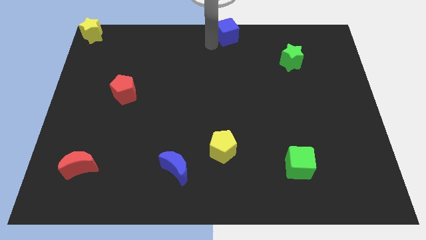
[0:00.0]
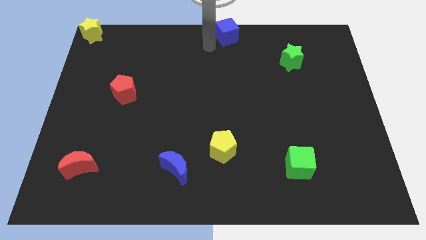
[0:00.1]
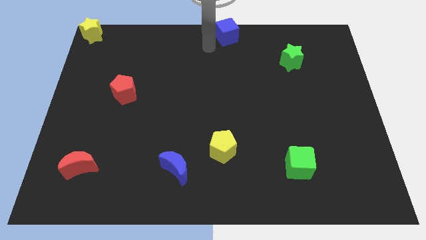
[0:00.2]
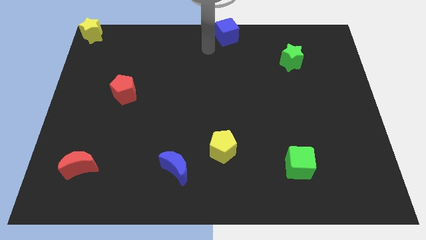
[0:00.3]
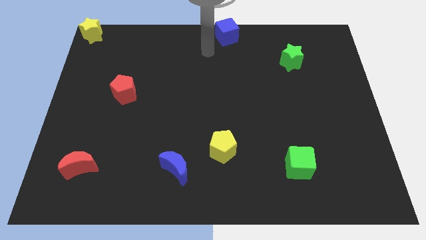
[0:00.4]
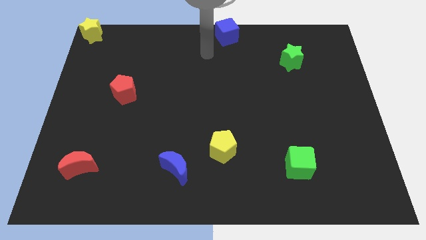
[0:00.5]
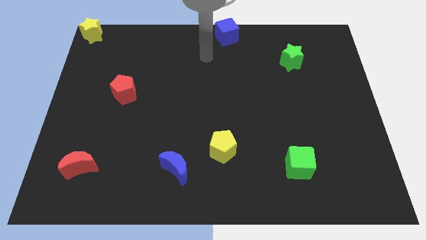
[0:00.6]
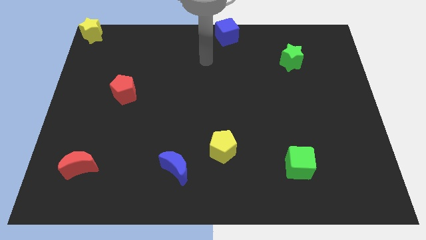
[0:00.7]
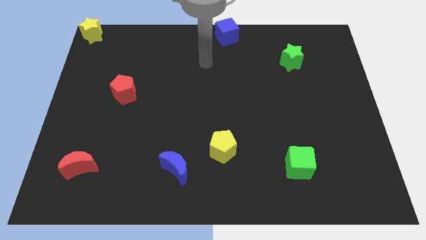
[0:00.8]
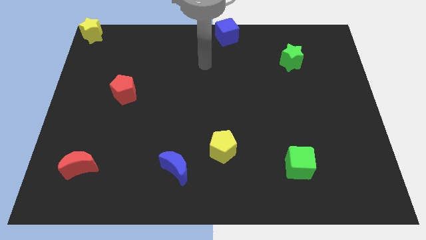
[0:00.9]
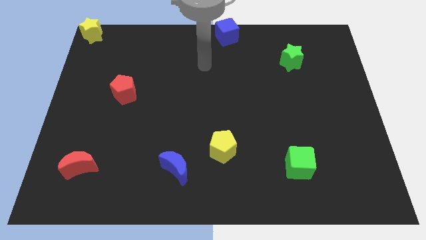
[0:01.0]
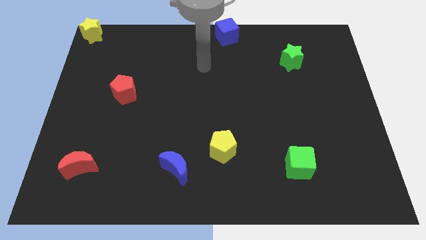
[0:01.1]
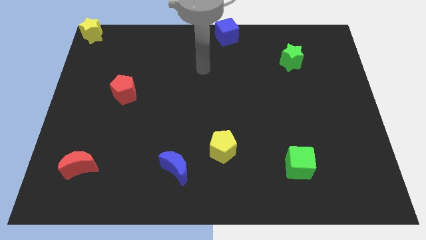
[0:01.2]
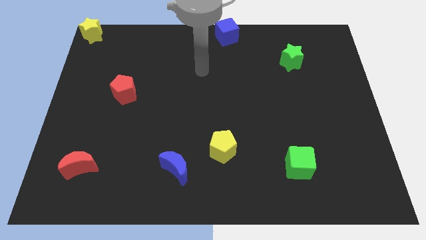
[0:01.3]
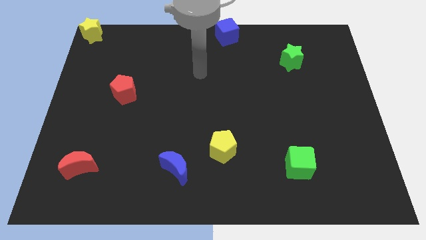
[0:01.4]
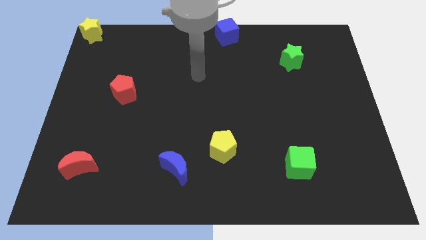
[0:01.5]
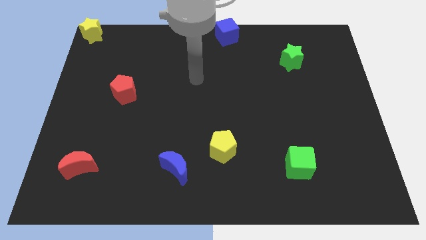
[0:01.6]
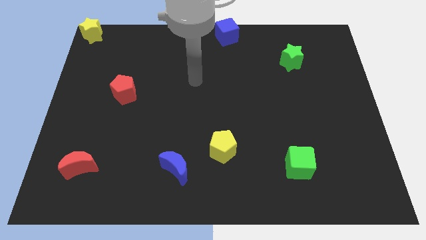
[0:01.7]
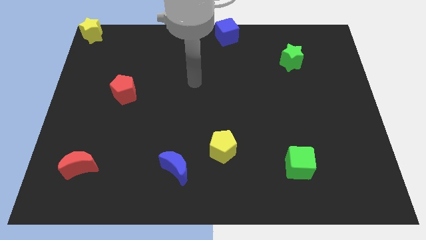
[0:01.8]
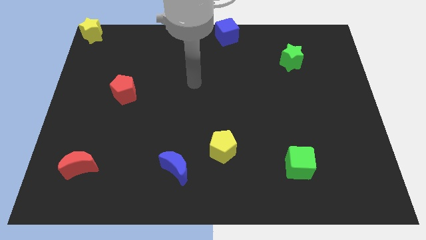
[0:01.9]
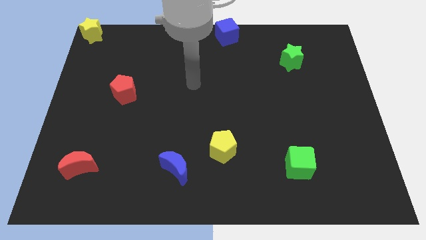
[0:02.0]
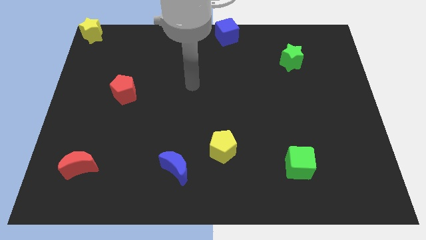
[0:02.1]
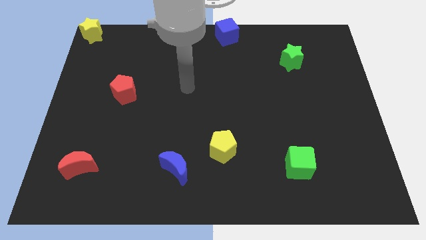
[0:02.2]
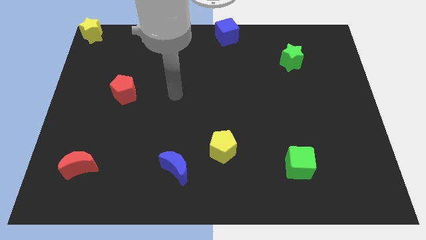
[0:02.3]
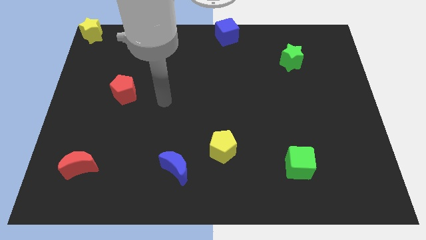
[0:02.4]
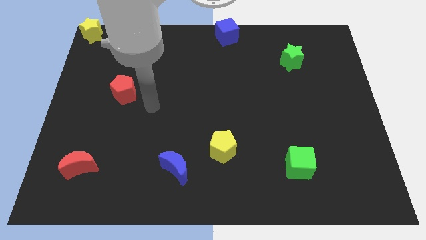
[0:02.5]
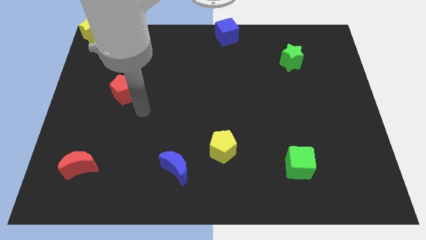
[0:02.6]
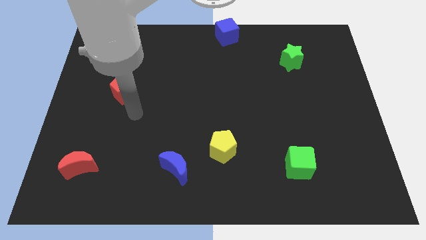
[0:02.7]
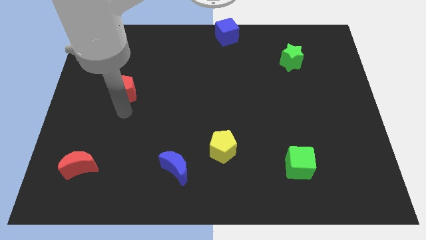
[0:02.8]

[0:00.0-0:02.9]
point the arm below the red pentagon

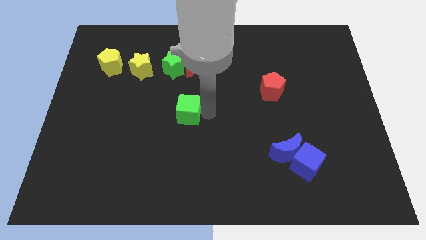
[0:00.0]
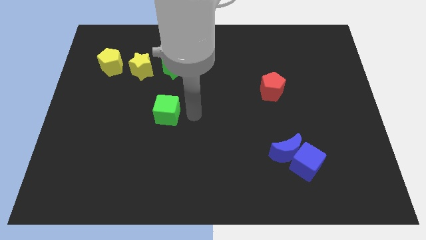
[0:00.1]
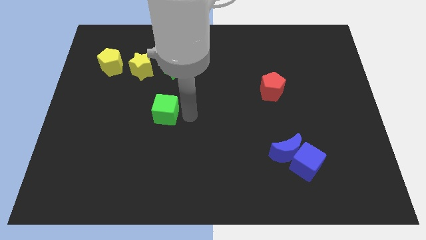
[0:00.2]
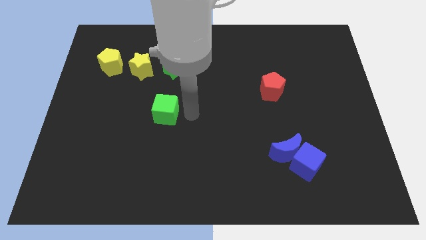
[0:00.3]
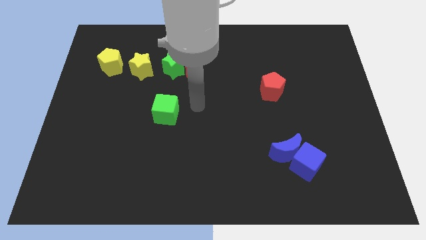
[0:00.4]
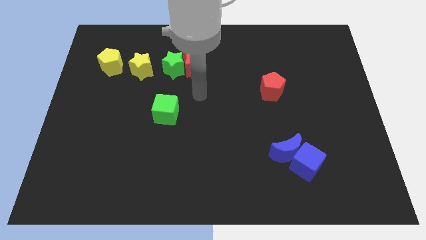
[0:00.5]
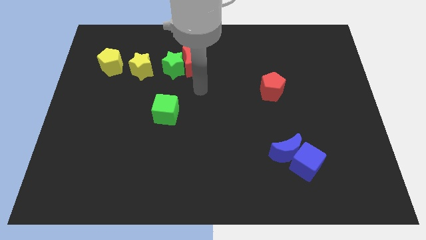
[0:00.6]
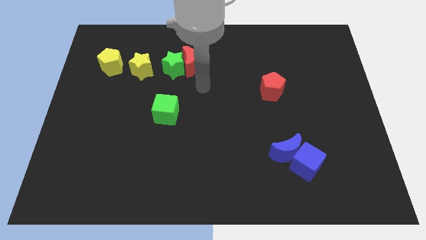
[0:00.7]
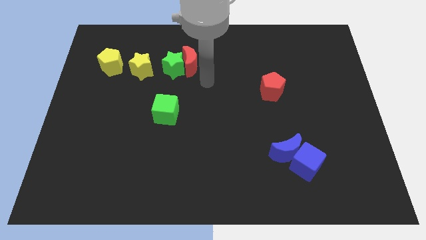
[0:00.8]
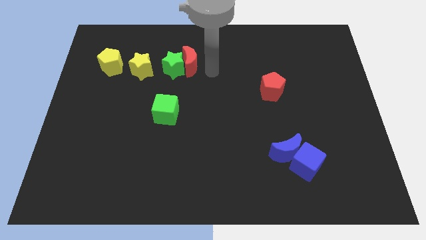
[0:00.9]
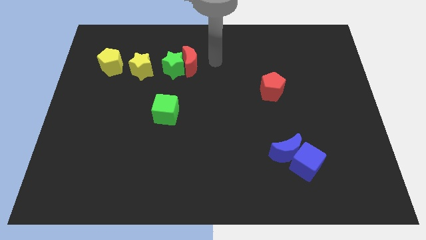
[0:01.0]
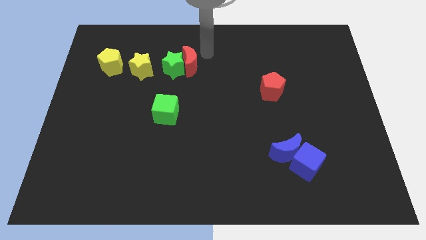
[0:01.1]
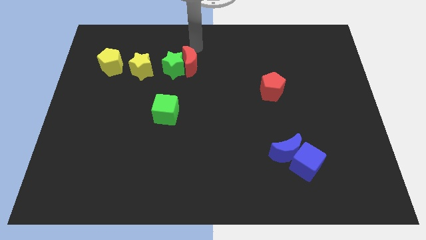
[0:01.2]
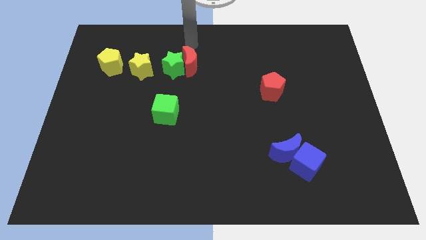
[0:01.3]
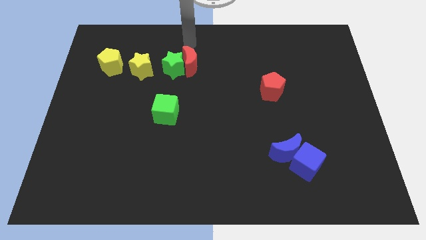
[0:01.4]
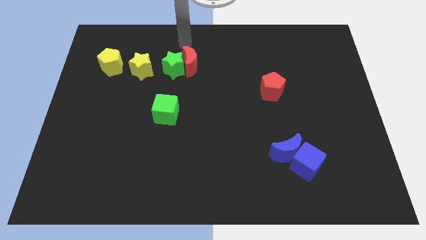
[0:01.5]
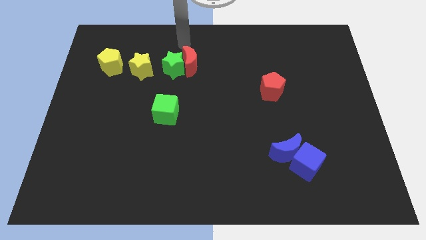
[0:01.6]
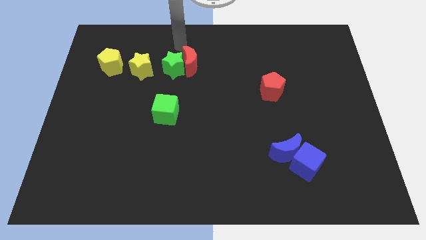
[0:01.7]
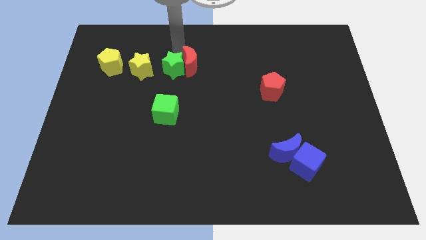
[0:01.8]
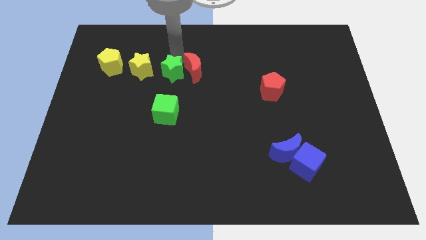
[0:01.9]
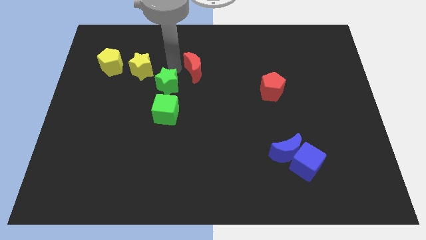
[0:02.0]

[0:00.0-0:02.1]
move your arm to the top of the green star

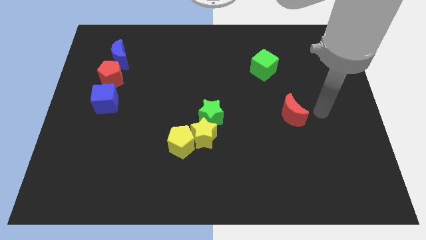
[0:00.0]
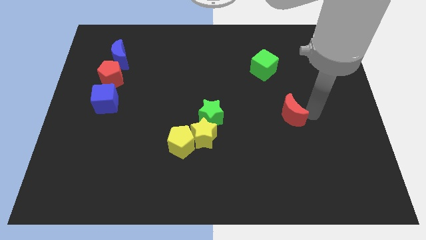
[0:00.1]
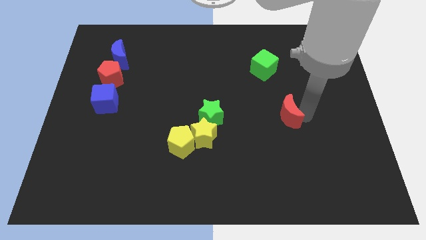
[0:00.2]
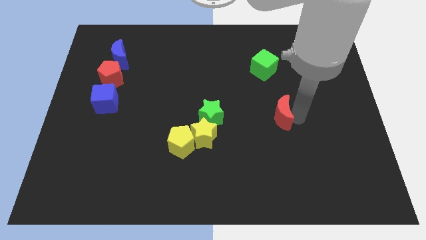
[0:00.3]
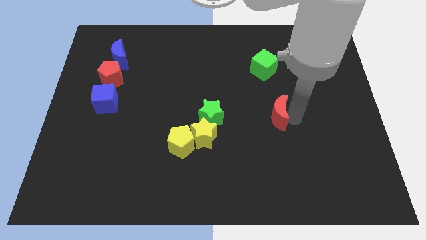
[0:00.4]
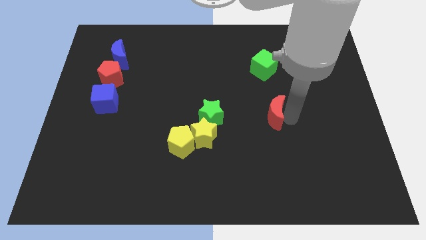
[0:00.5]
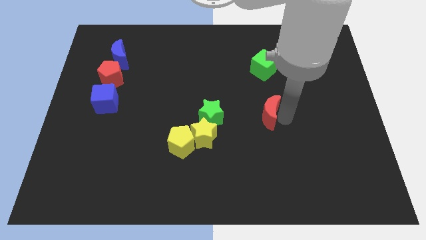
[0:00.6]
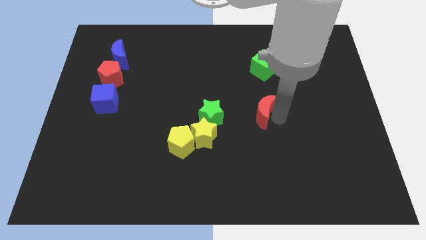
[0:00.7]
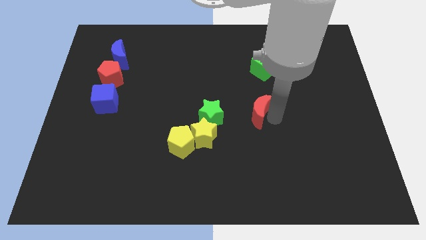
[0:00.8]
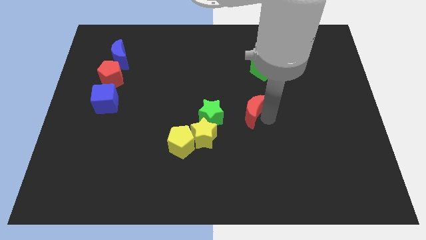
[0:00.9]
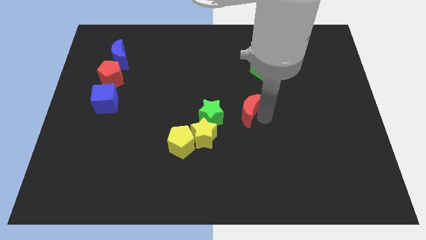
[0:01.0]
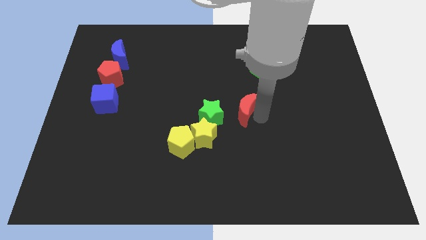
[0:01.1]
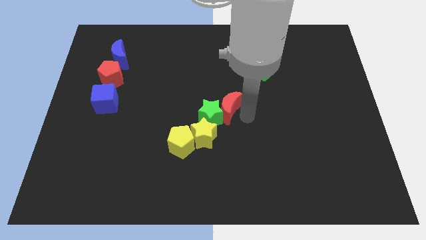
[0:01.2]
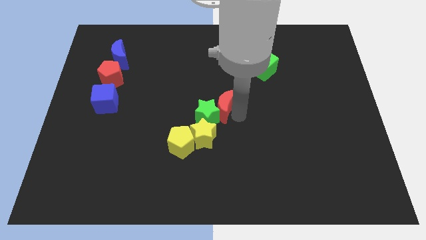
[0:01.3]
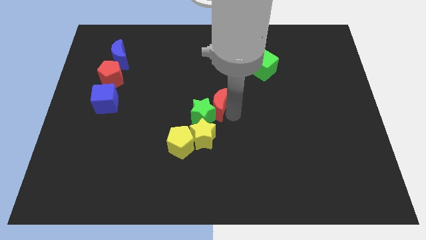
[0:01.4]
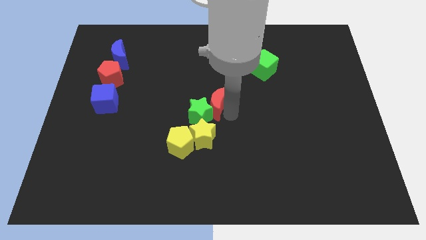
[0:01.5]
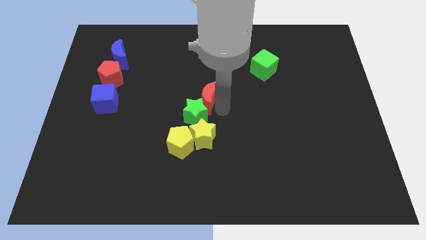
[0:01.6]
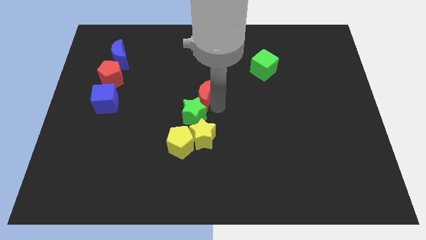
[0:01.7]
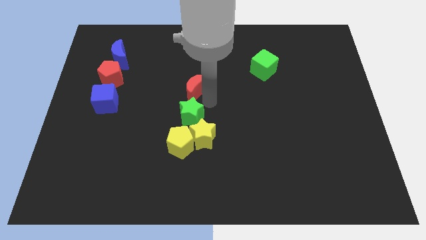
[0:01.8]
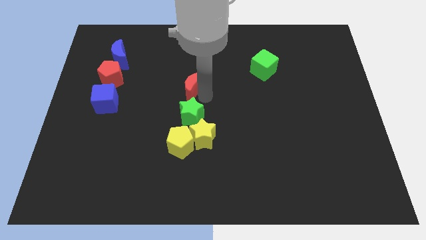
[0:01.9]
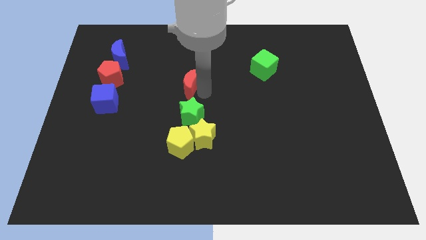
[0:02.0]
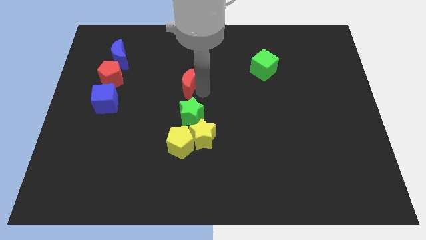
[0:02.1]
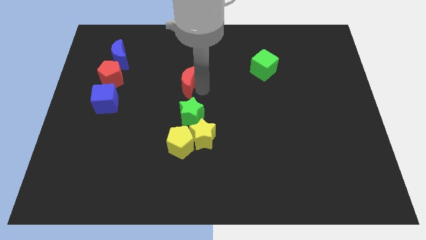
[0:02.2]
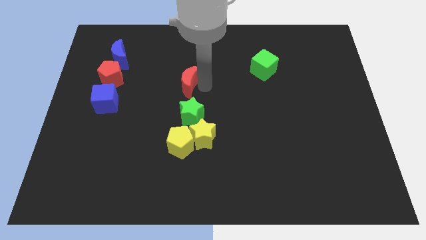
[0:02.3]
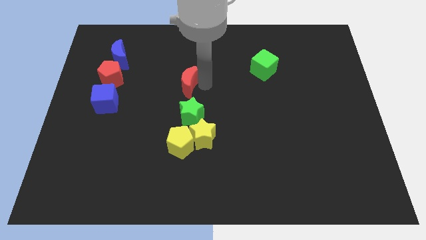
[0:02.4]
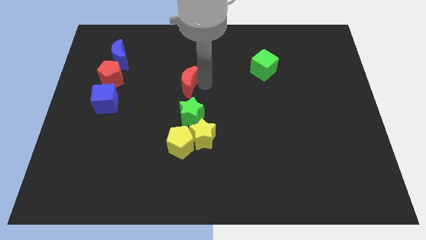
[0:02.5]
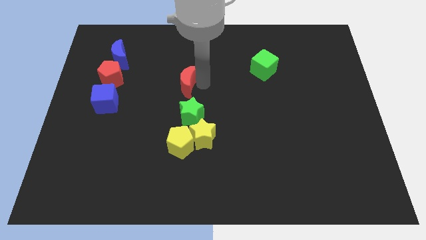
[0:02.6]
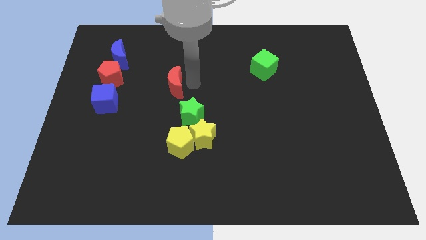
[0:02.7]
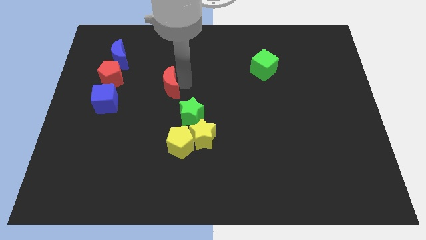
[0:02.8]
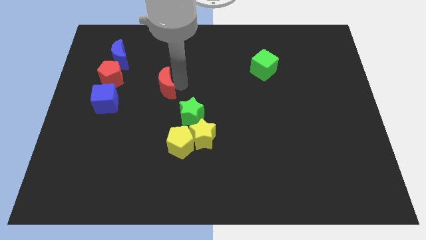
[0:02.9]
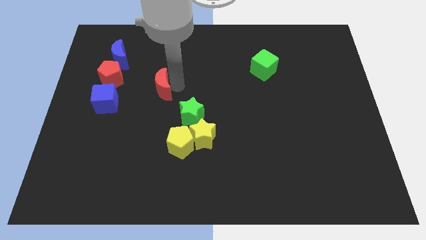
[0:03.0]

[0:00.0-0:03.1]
push red crescent above yellow pentagon

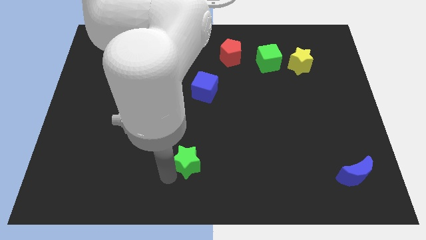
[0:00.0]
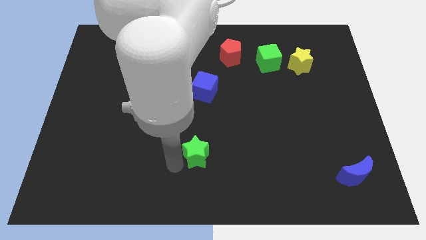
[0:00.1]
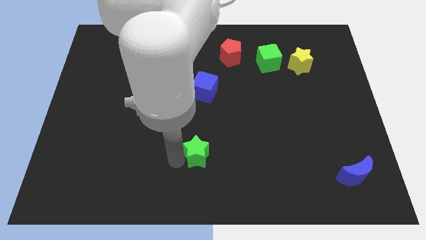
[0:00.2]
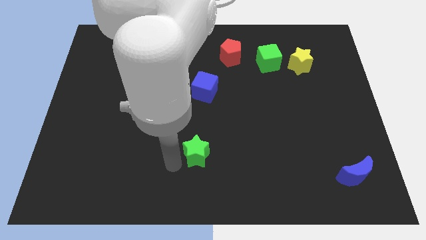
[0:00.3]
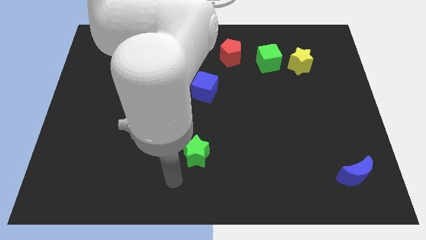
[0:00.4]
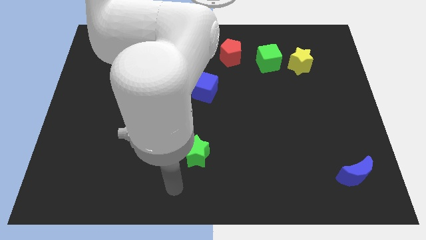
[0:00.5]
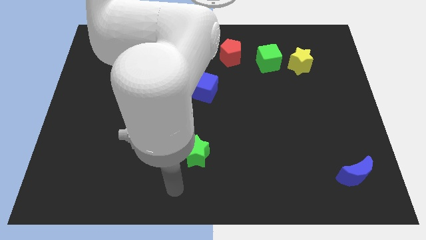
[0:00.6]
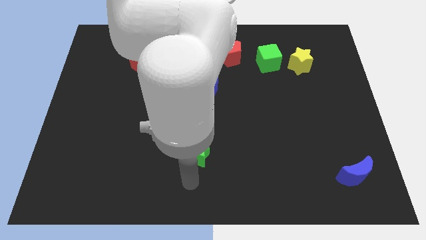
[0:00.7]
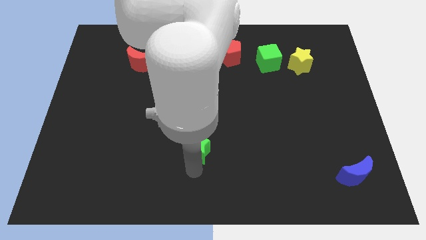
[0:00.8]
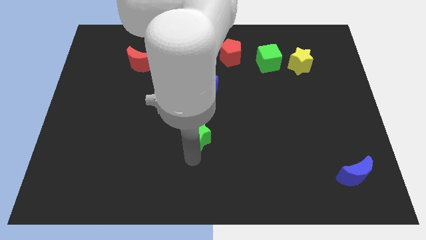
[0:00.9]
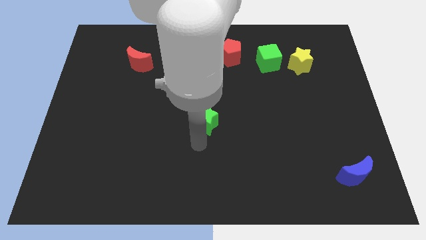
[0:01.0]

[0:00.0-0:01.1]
move the green star below the blue cube
